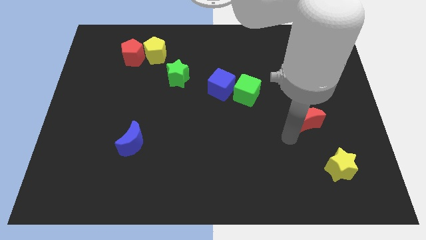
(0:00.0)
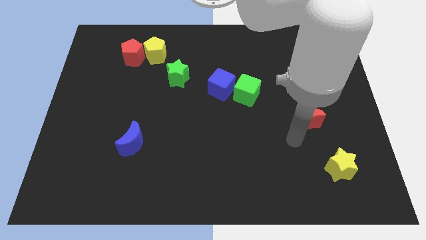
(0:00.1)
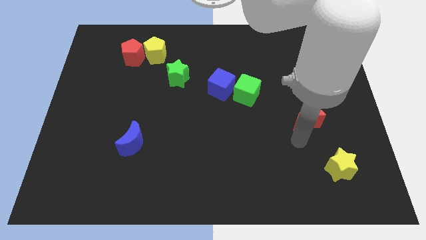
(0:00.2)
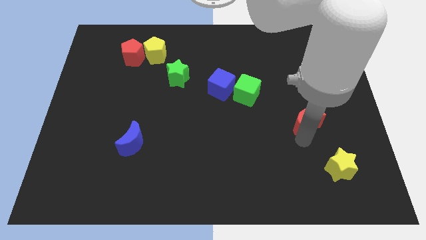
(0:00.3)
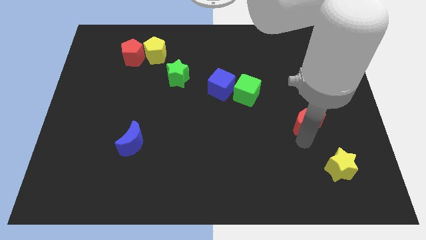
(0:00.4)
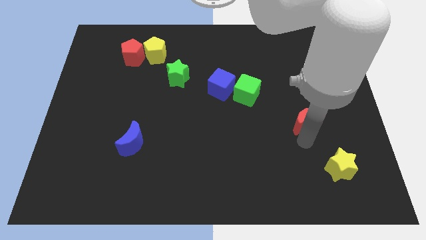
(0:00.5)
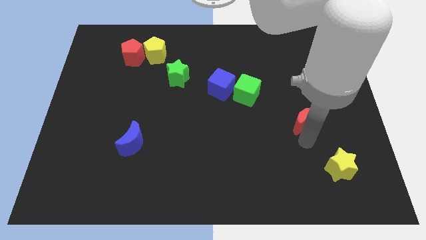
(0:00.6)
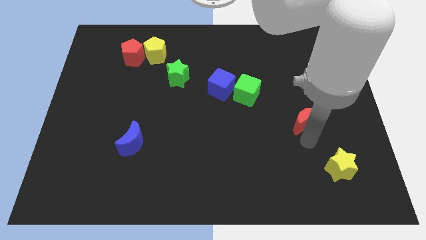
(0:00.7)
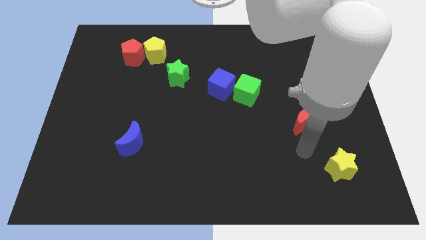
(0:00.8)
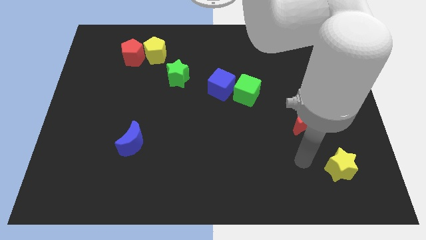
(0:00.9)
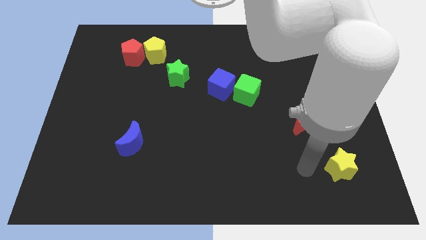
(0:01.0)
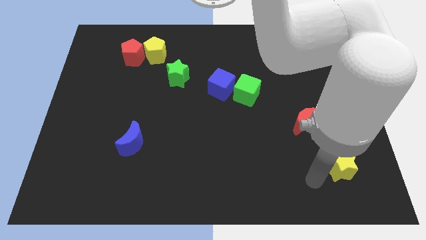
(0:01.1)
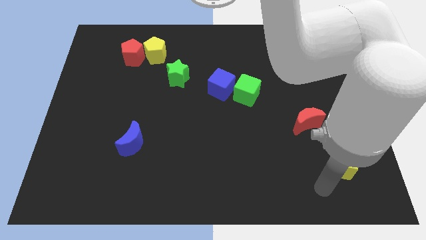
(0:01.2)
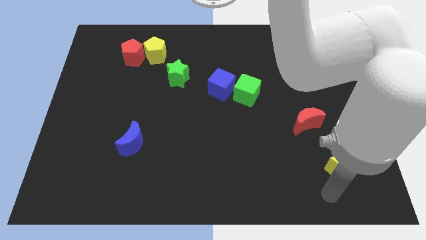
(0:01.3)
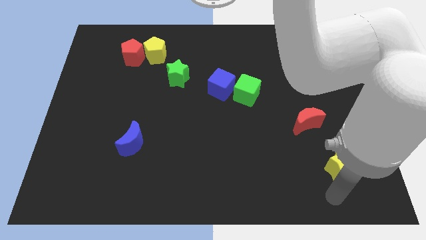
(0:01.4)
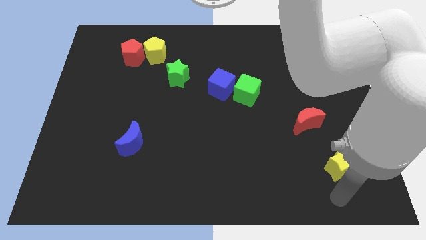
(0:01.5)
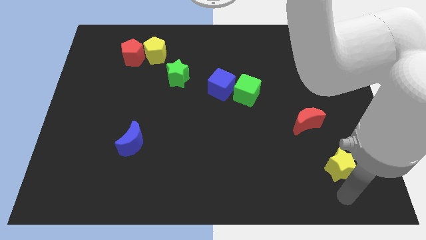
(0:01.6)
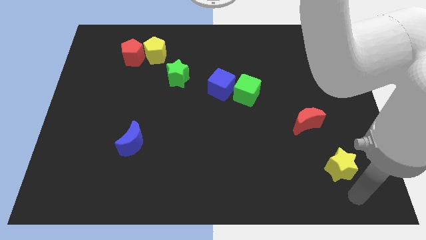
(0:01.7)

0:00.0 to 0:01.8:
move the arm to the bottom of the yellow star

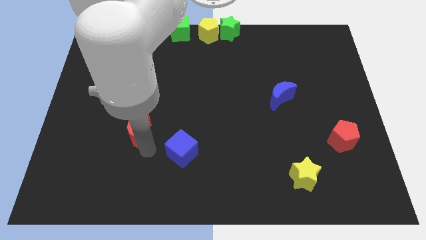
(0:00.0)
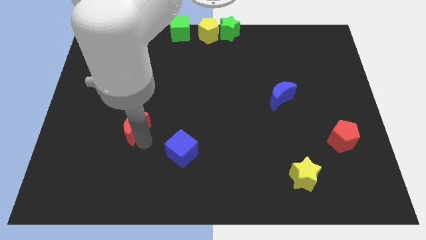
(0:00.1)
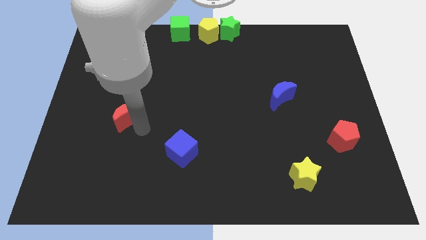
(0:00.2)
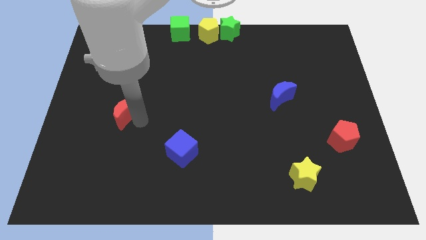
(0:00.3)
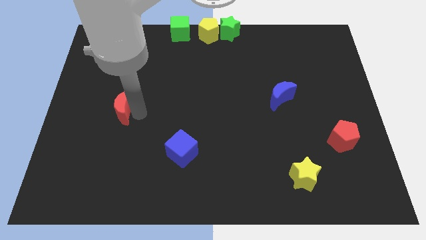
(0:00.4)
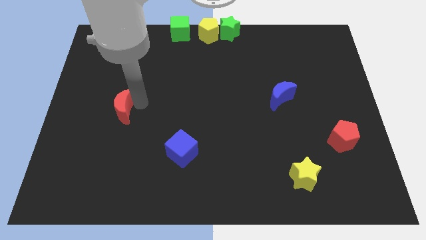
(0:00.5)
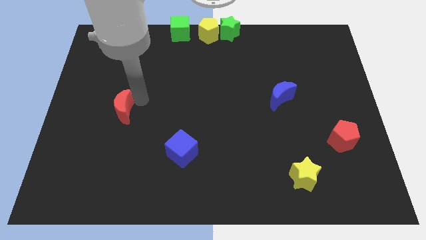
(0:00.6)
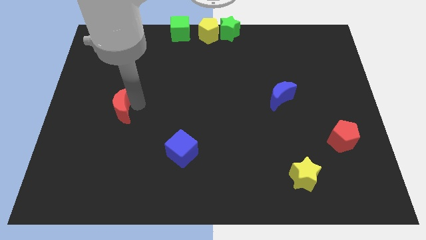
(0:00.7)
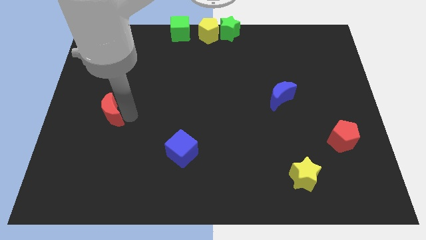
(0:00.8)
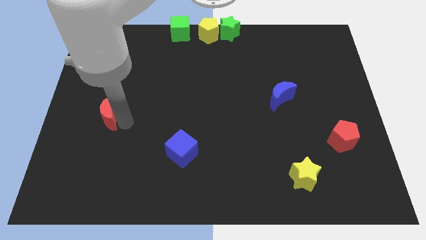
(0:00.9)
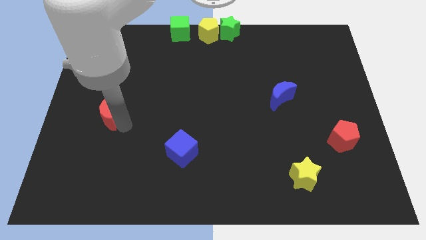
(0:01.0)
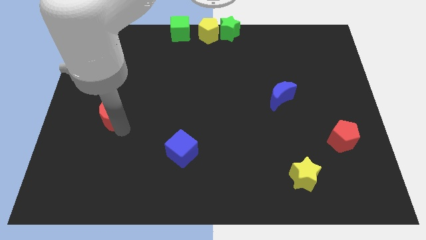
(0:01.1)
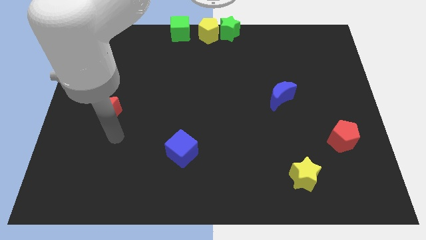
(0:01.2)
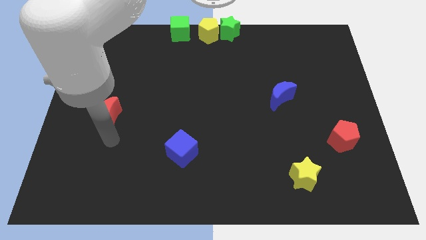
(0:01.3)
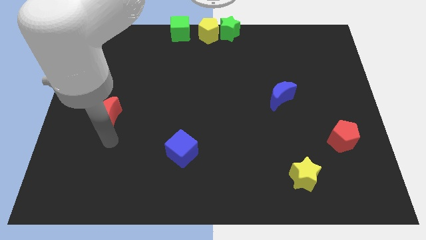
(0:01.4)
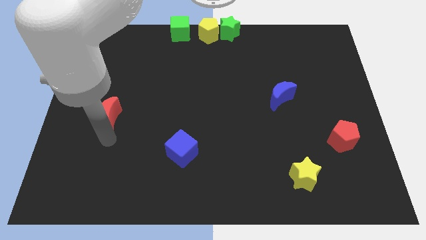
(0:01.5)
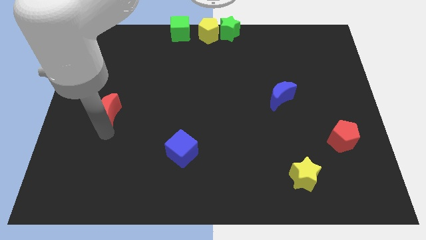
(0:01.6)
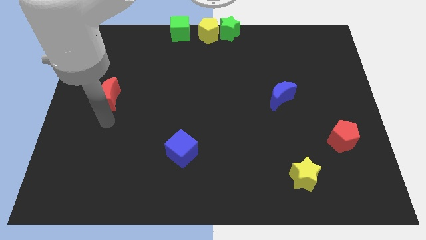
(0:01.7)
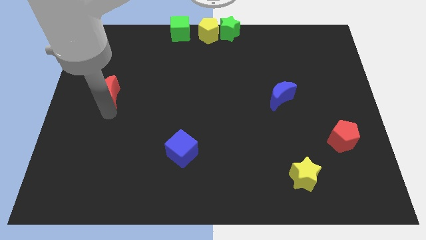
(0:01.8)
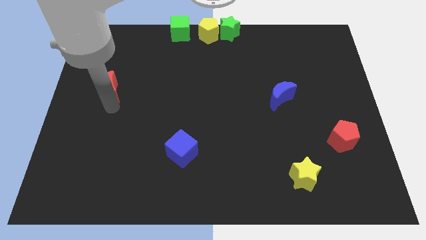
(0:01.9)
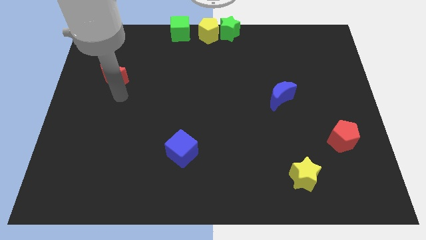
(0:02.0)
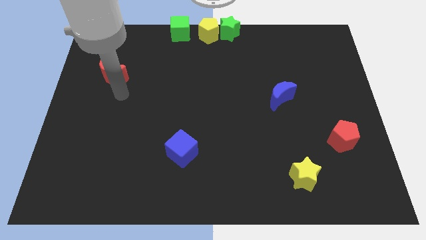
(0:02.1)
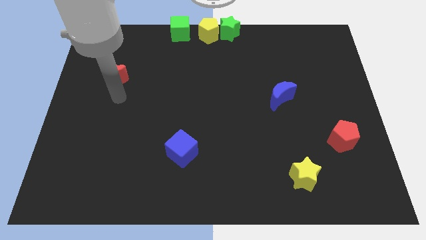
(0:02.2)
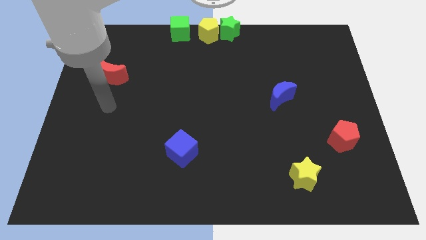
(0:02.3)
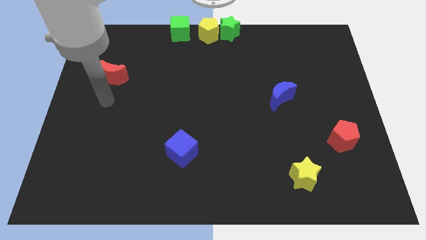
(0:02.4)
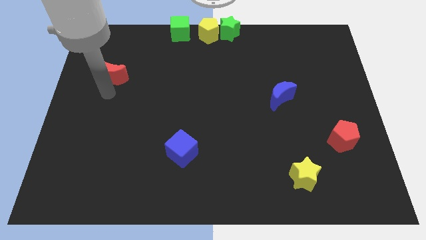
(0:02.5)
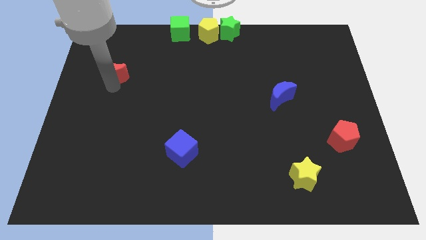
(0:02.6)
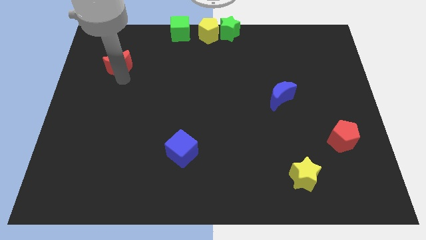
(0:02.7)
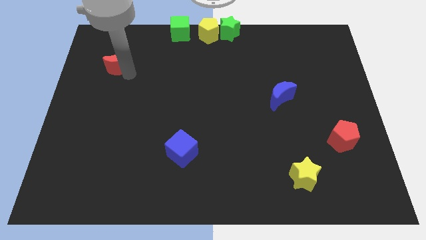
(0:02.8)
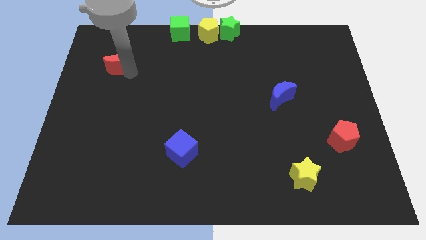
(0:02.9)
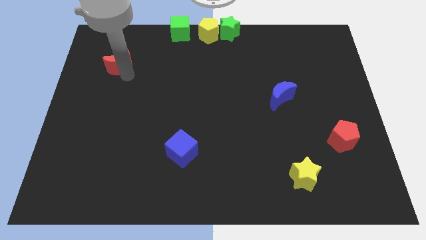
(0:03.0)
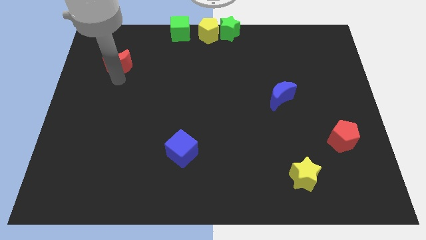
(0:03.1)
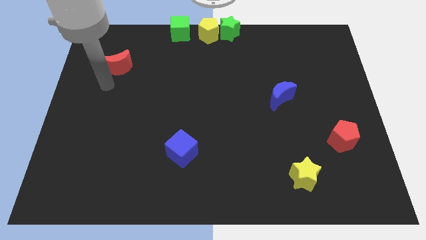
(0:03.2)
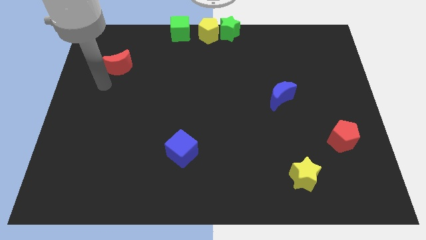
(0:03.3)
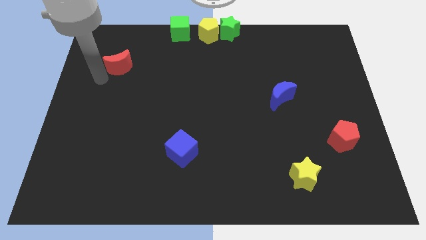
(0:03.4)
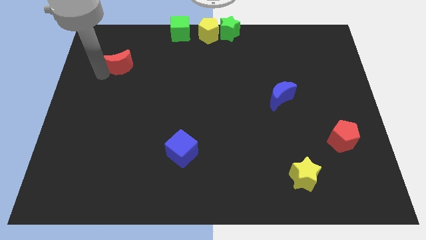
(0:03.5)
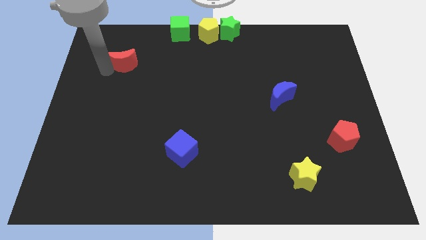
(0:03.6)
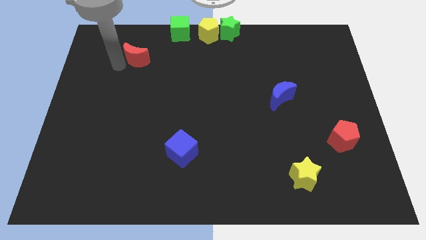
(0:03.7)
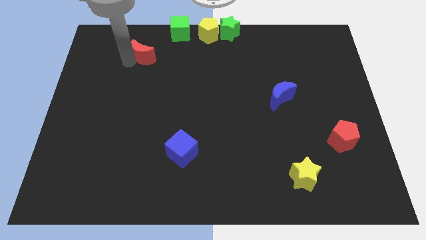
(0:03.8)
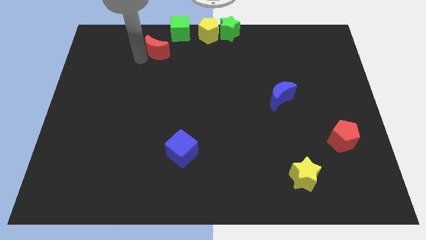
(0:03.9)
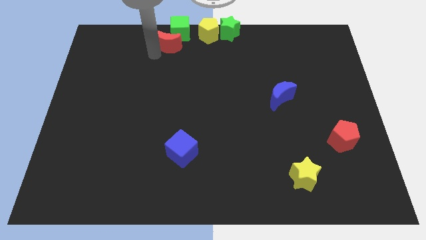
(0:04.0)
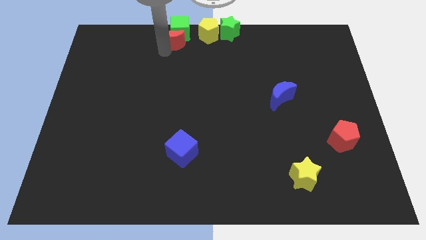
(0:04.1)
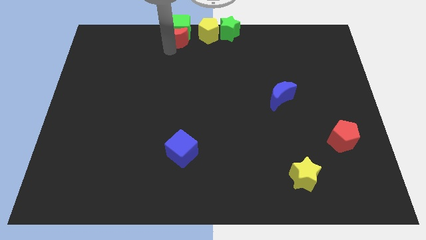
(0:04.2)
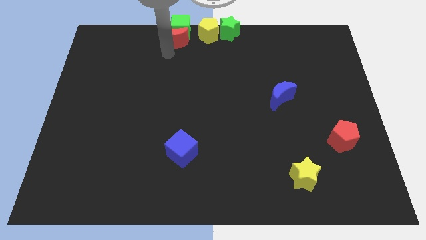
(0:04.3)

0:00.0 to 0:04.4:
place red moon below green cube

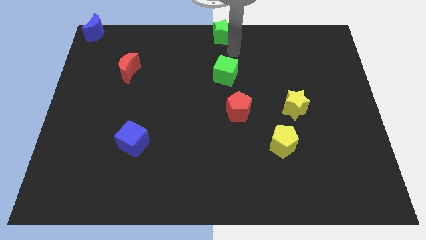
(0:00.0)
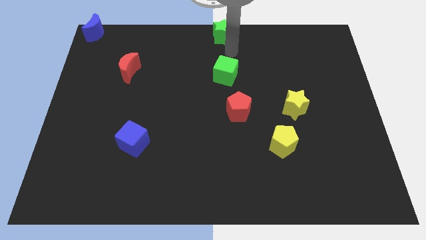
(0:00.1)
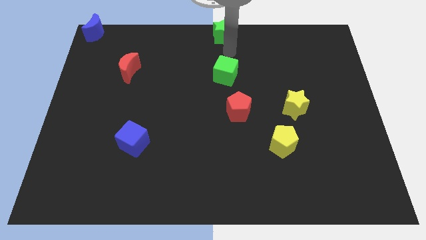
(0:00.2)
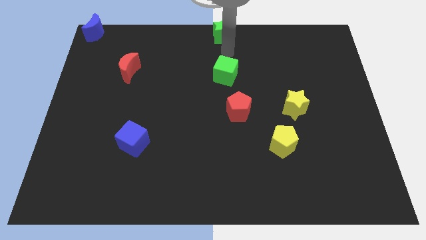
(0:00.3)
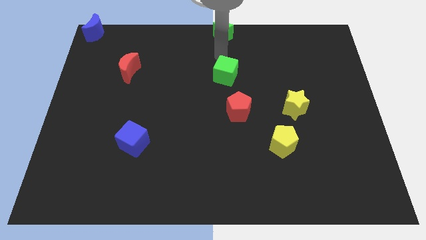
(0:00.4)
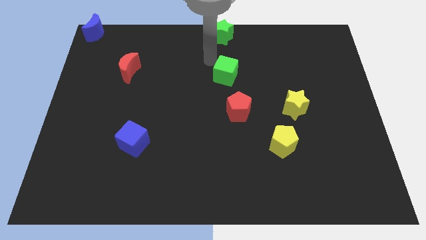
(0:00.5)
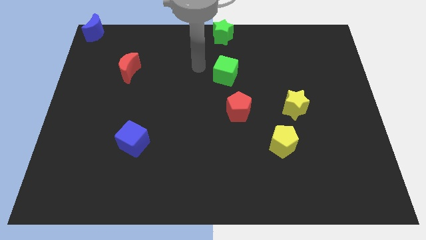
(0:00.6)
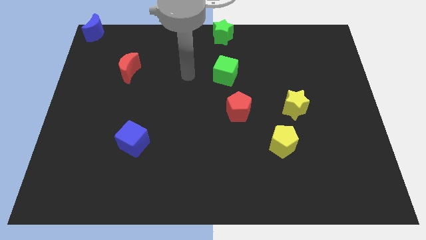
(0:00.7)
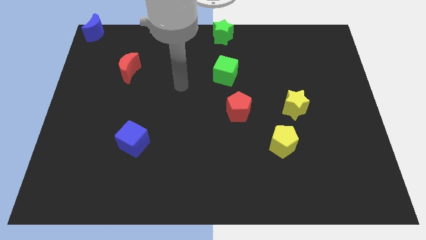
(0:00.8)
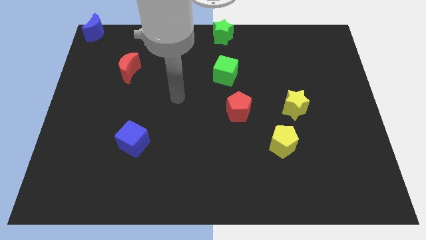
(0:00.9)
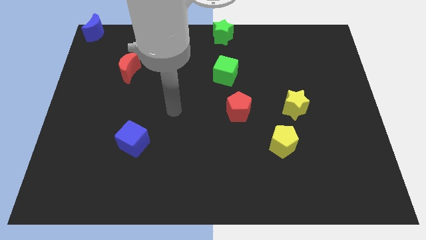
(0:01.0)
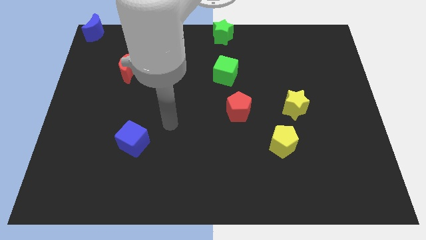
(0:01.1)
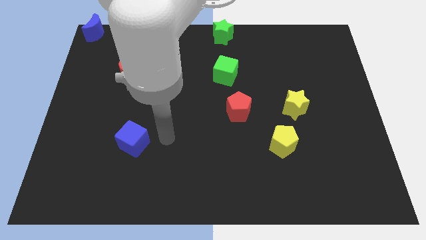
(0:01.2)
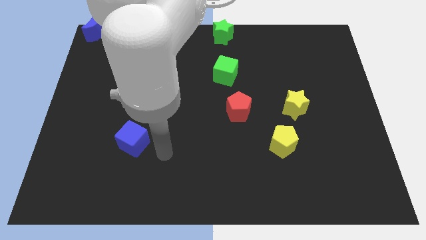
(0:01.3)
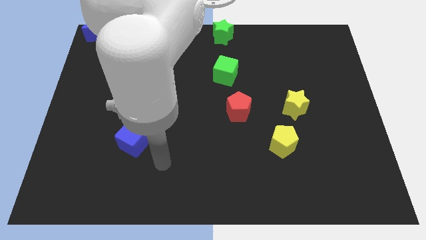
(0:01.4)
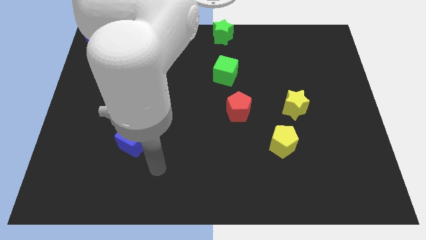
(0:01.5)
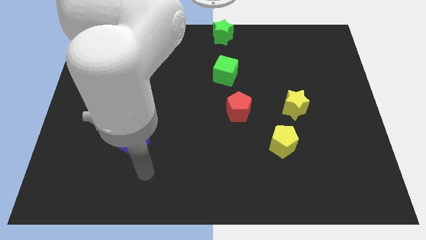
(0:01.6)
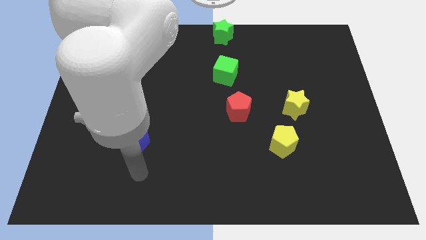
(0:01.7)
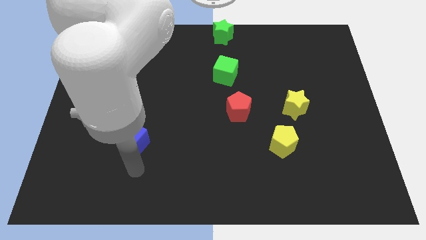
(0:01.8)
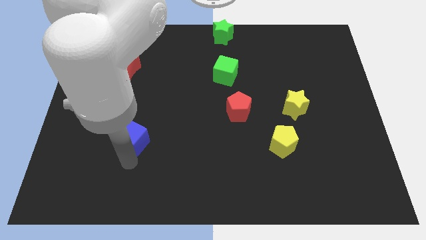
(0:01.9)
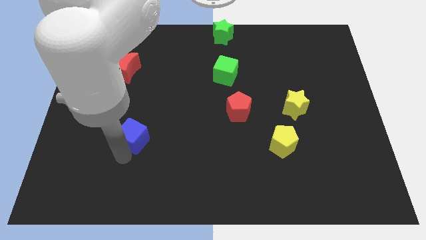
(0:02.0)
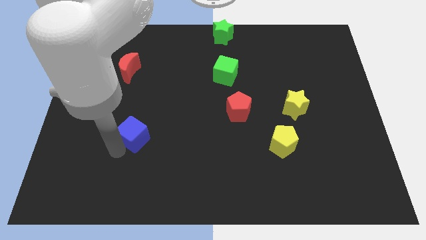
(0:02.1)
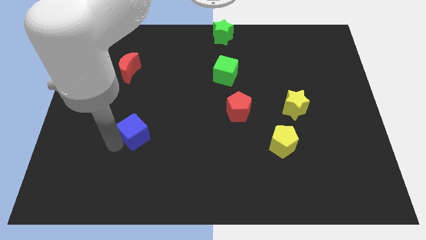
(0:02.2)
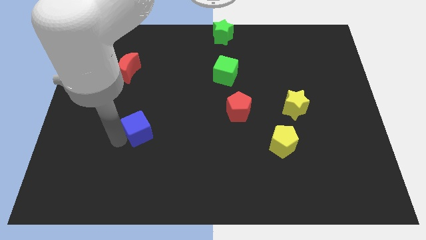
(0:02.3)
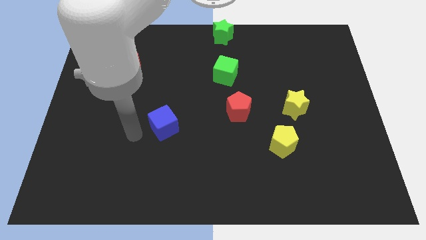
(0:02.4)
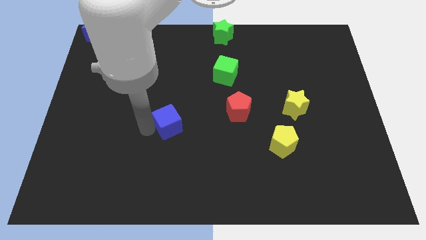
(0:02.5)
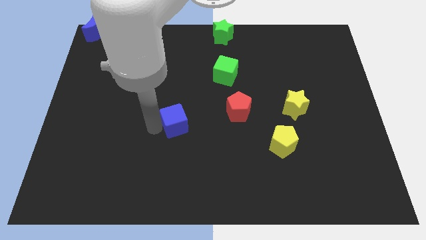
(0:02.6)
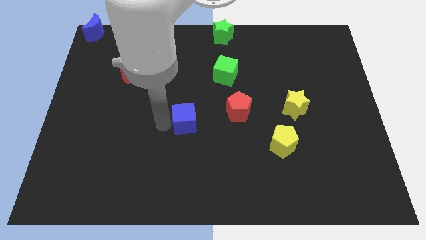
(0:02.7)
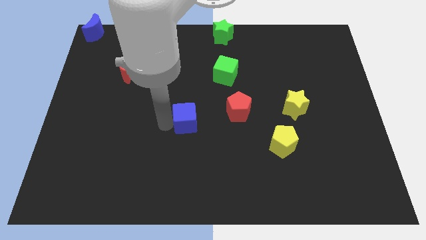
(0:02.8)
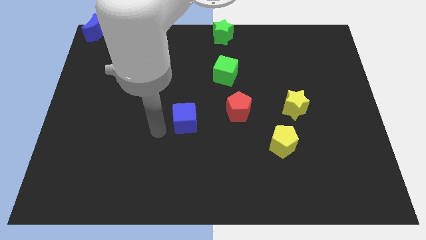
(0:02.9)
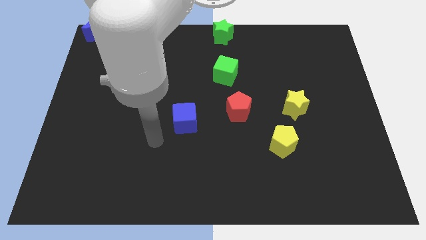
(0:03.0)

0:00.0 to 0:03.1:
move the blue cube diagonally on the bottom left side of the red pentagon
